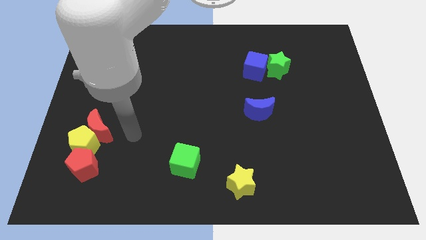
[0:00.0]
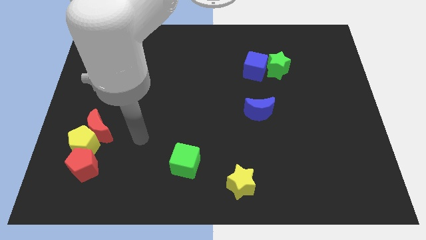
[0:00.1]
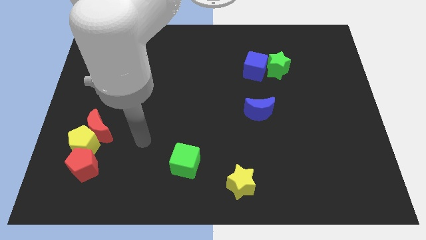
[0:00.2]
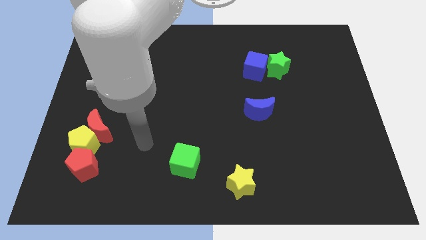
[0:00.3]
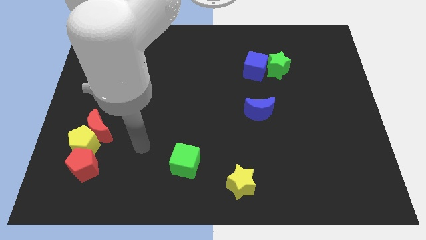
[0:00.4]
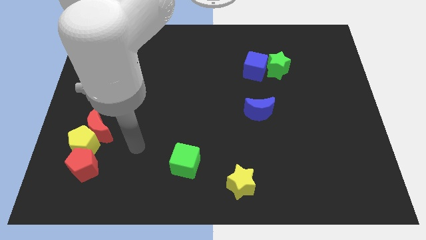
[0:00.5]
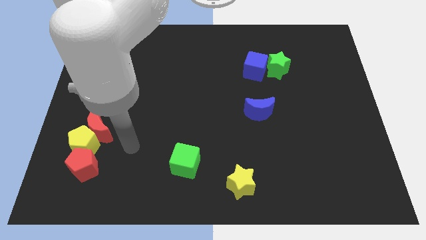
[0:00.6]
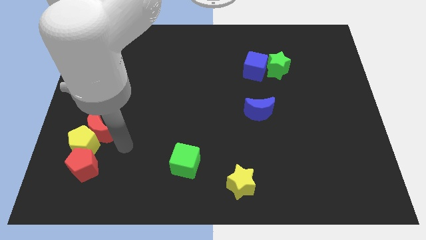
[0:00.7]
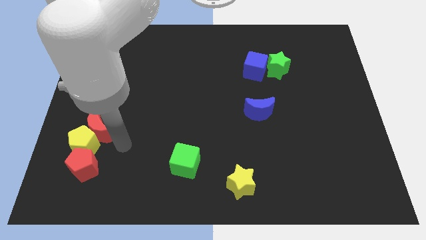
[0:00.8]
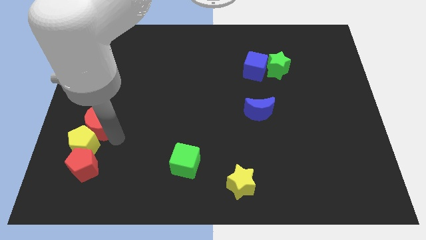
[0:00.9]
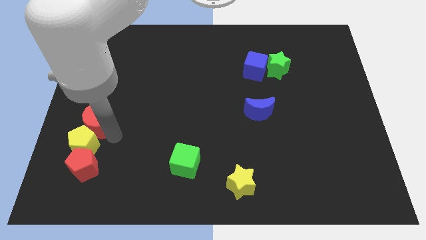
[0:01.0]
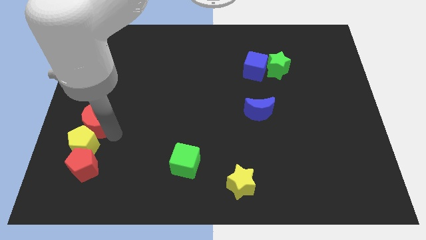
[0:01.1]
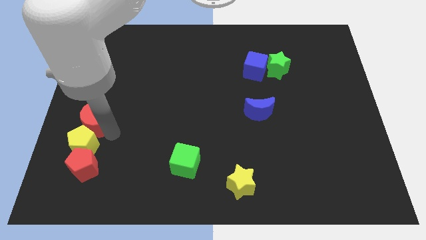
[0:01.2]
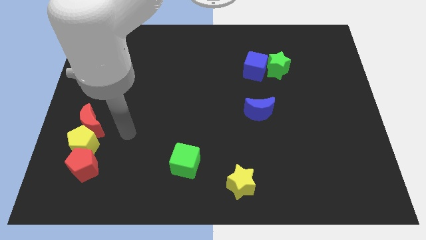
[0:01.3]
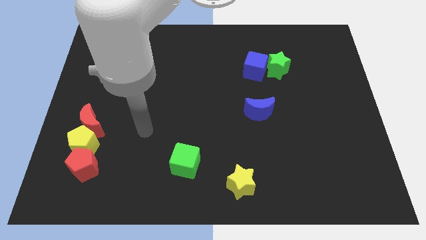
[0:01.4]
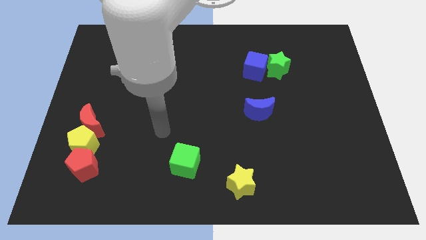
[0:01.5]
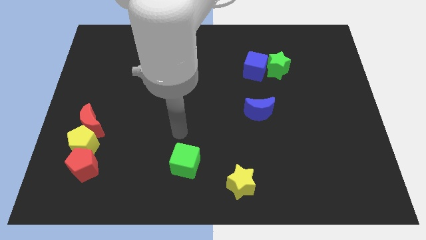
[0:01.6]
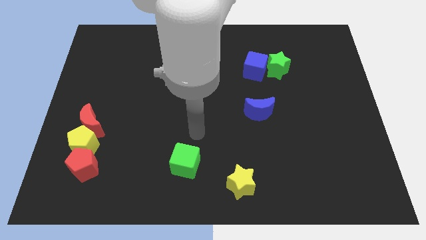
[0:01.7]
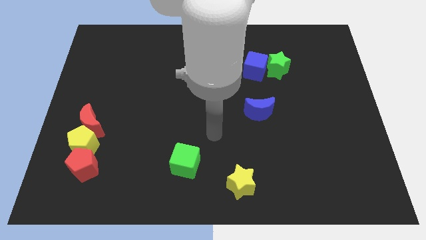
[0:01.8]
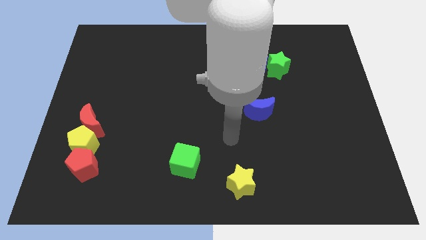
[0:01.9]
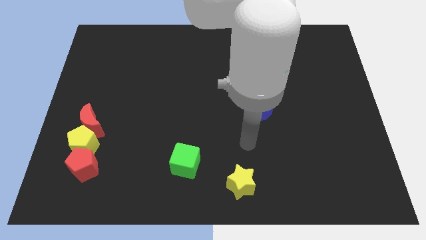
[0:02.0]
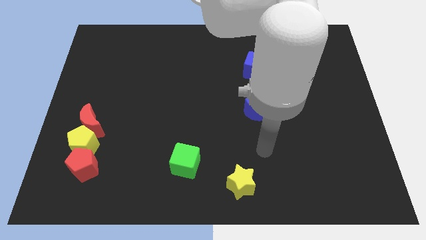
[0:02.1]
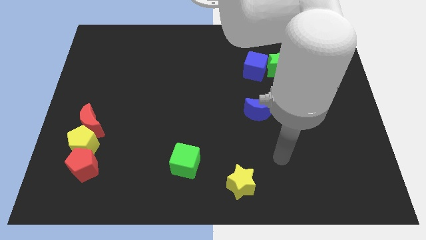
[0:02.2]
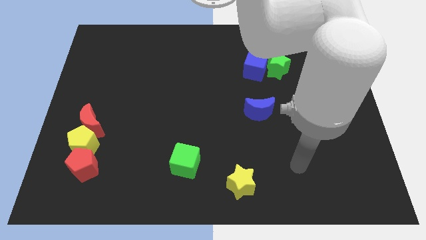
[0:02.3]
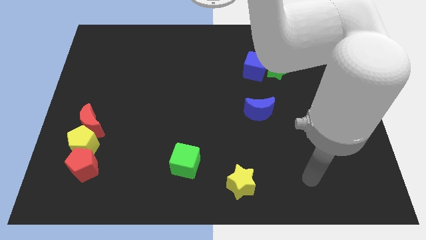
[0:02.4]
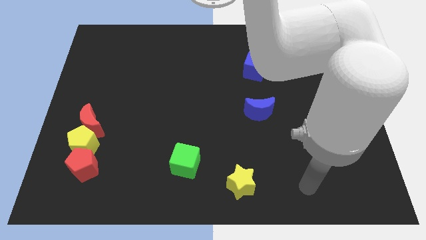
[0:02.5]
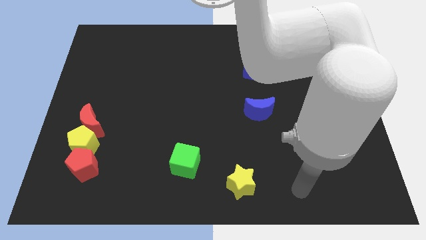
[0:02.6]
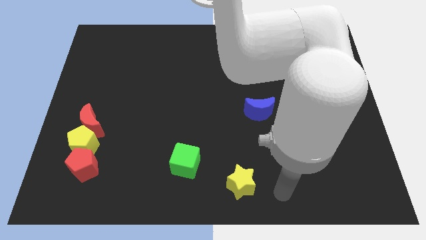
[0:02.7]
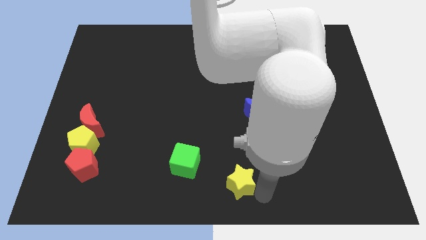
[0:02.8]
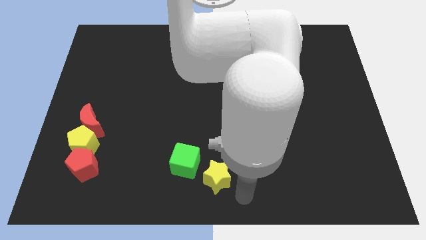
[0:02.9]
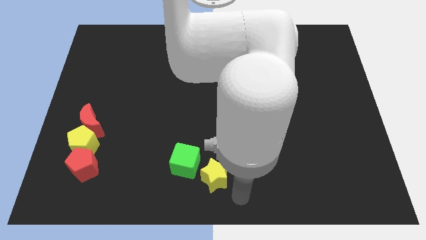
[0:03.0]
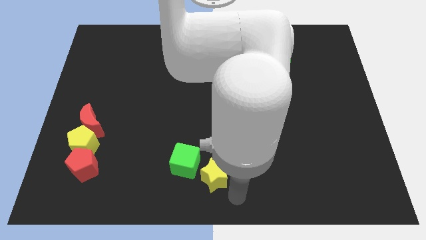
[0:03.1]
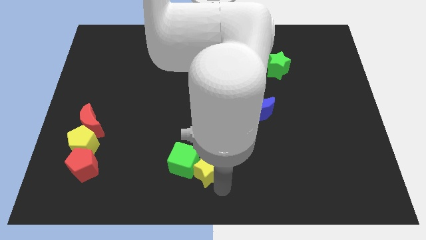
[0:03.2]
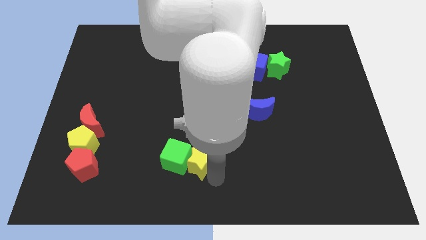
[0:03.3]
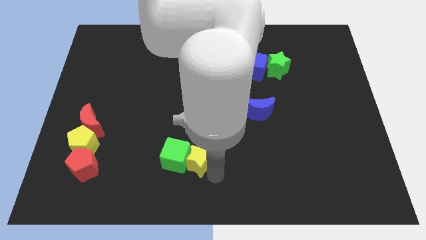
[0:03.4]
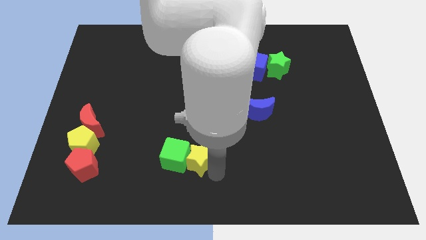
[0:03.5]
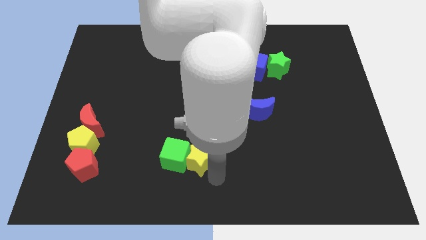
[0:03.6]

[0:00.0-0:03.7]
push yellow star close to green cube

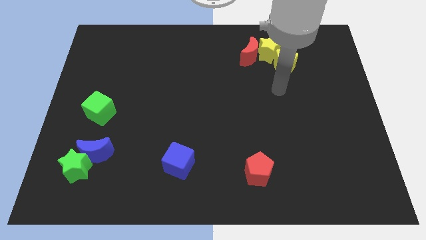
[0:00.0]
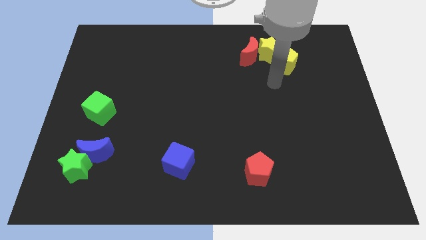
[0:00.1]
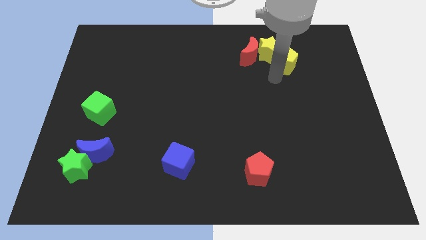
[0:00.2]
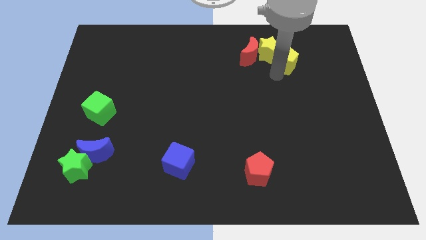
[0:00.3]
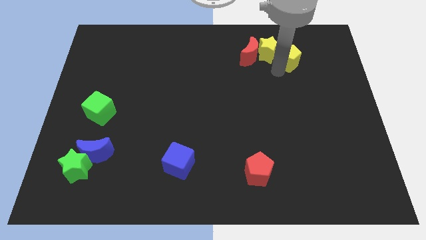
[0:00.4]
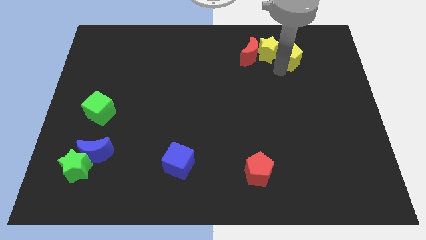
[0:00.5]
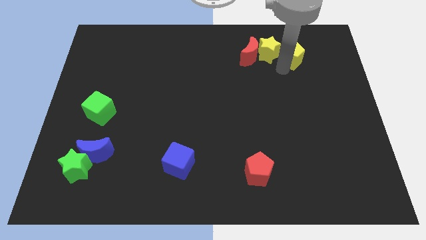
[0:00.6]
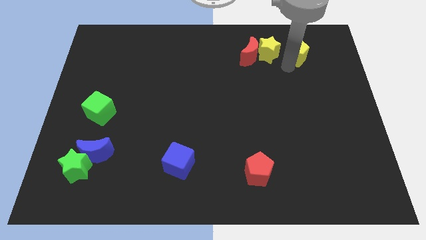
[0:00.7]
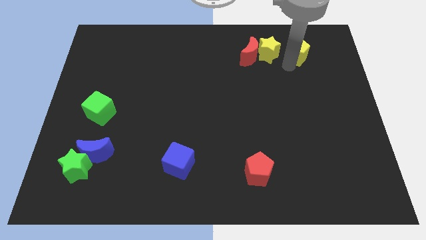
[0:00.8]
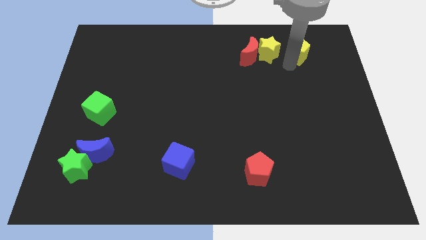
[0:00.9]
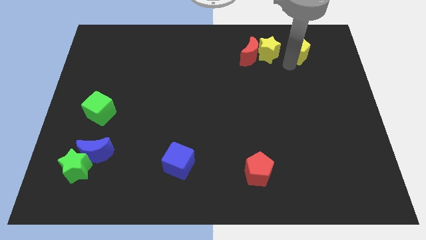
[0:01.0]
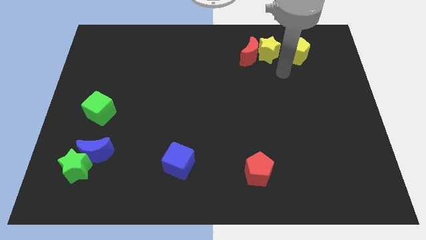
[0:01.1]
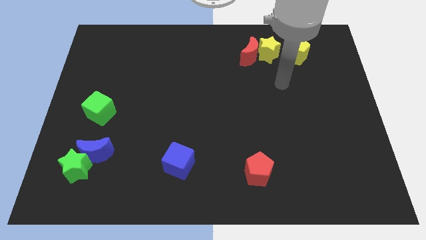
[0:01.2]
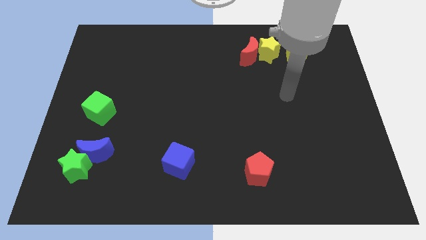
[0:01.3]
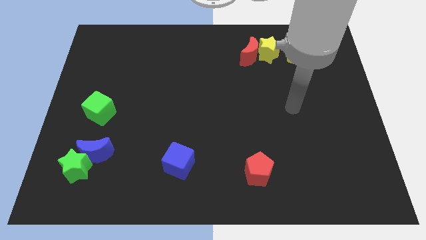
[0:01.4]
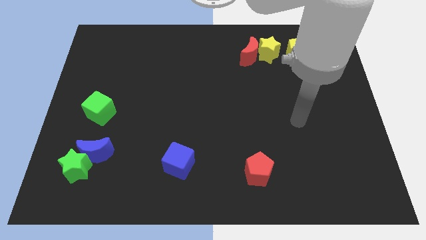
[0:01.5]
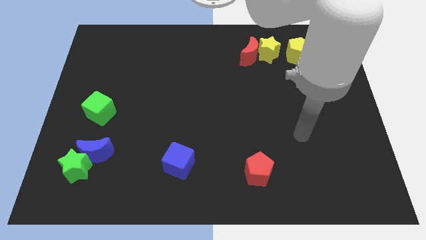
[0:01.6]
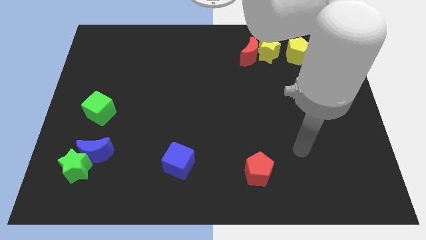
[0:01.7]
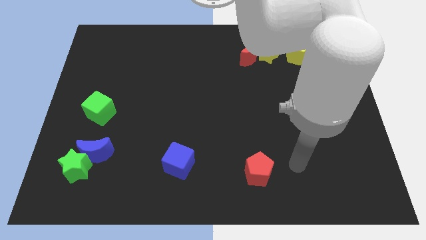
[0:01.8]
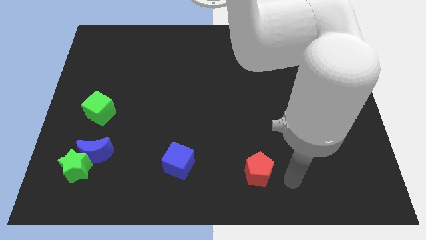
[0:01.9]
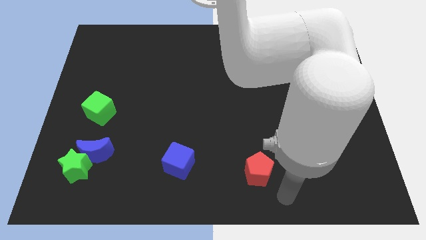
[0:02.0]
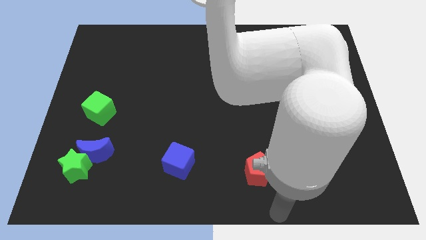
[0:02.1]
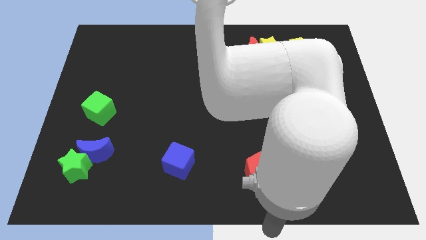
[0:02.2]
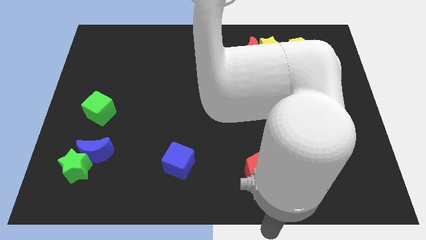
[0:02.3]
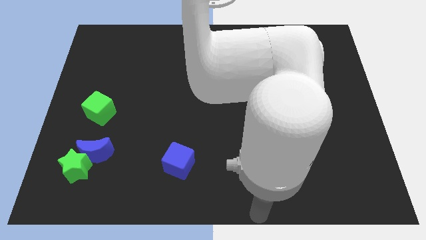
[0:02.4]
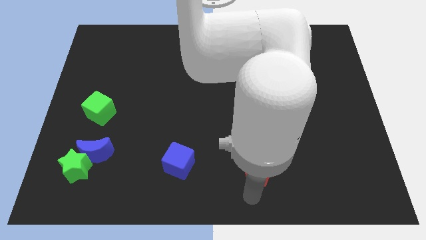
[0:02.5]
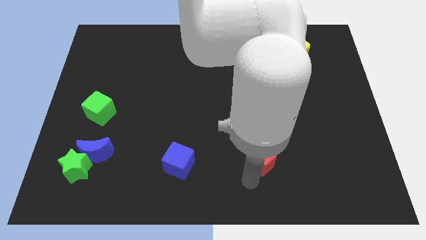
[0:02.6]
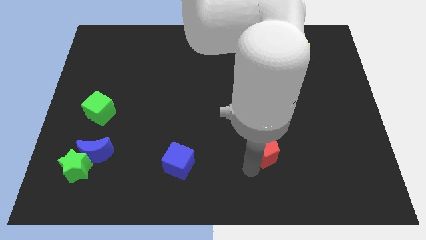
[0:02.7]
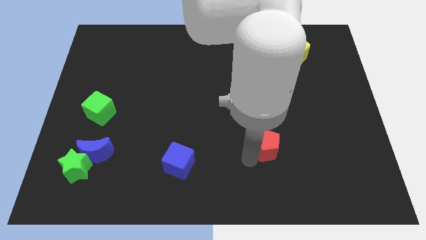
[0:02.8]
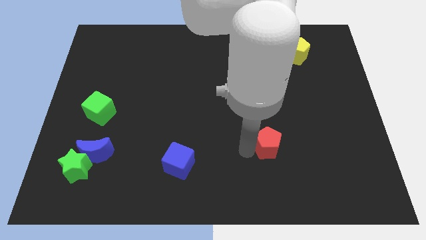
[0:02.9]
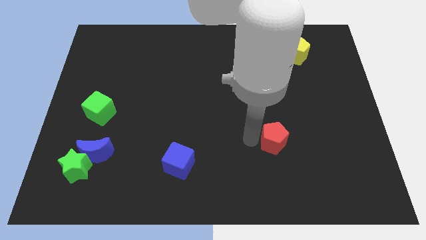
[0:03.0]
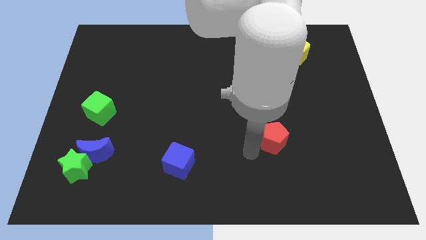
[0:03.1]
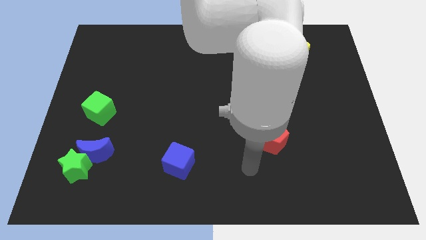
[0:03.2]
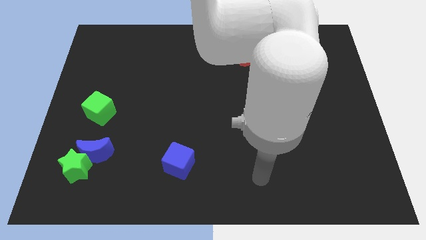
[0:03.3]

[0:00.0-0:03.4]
move the yellow pentagon and red pentagon towards top

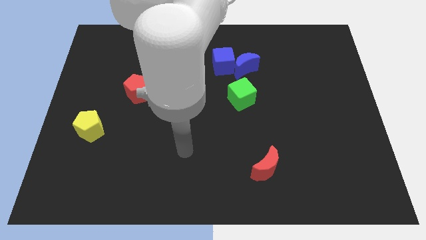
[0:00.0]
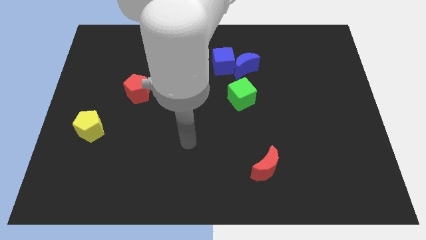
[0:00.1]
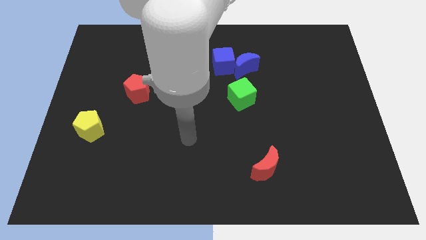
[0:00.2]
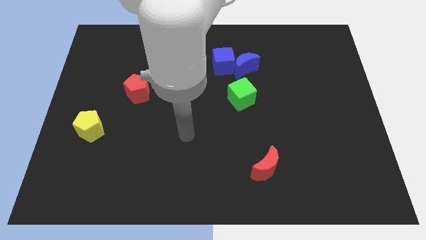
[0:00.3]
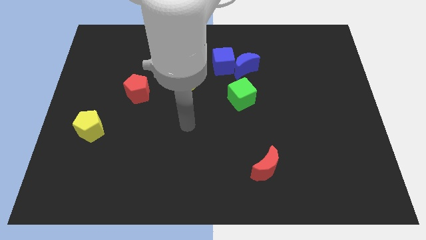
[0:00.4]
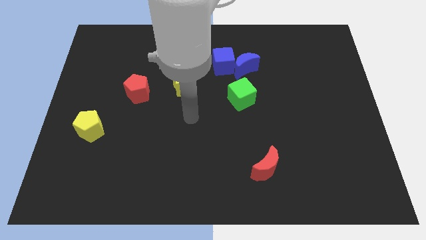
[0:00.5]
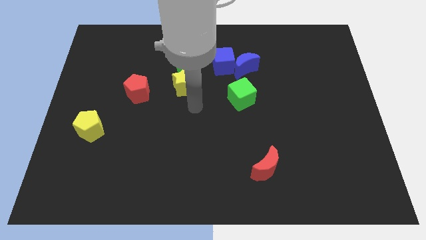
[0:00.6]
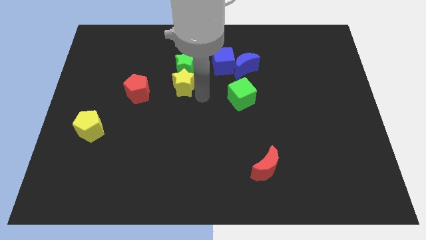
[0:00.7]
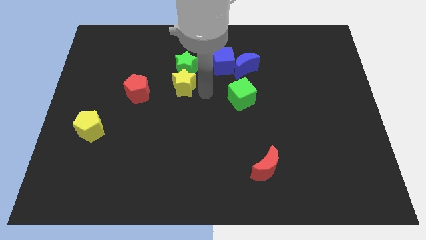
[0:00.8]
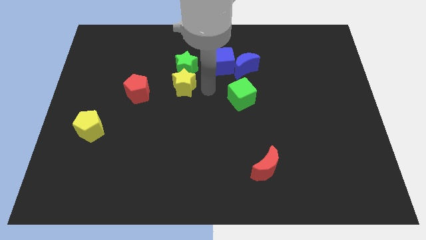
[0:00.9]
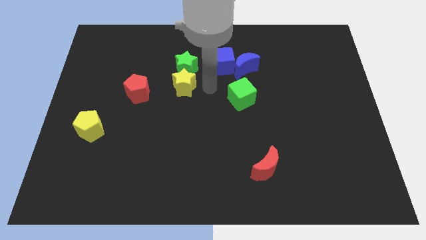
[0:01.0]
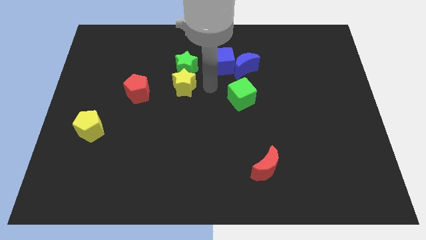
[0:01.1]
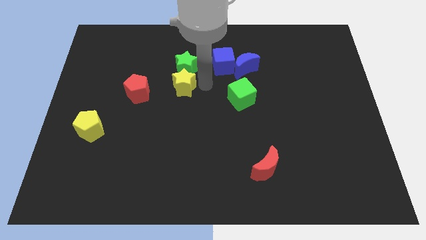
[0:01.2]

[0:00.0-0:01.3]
place your arm to the right side of yellow star

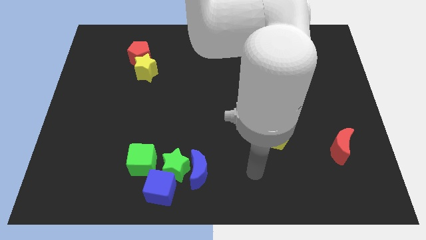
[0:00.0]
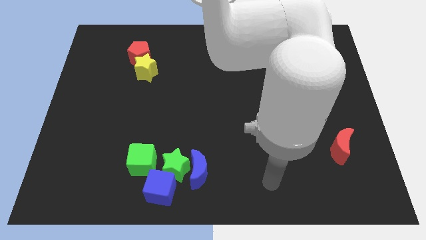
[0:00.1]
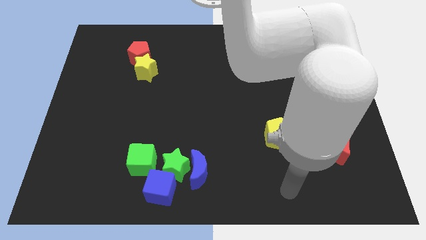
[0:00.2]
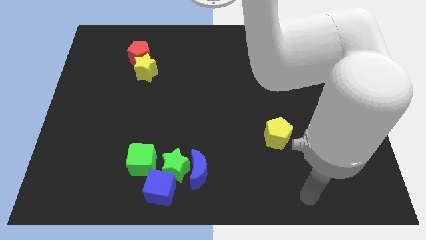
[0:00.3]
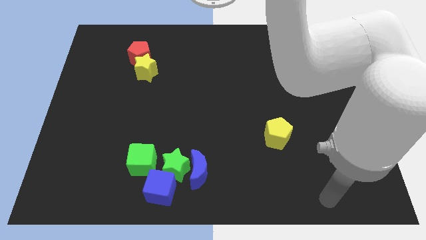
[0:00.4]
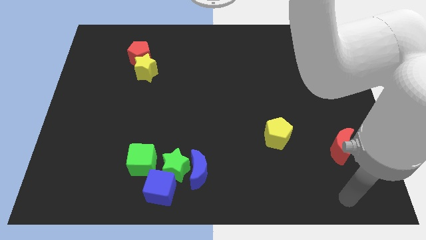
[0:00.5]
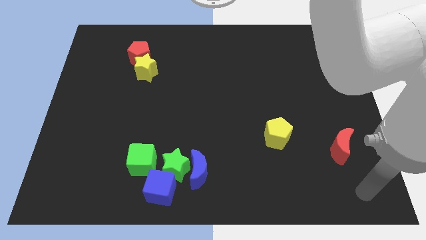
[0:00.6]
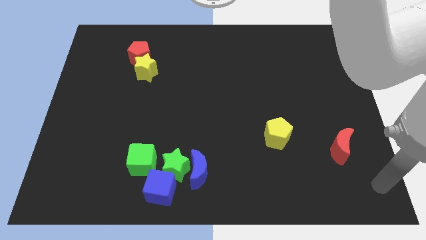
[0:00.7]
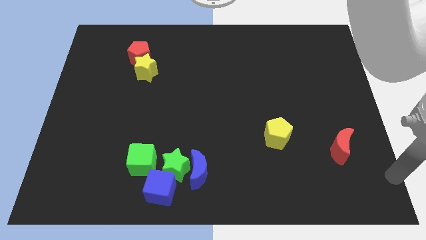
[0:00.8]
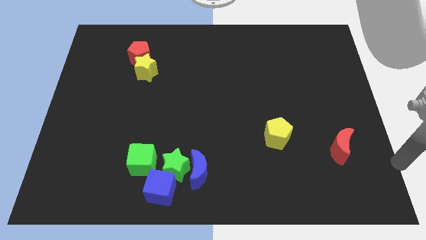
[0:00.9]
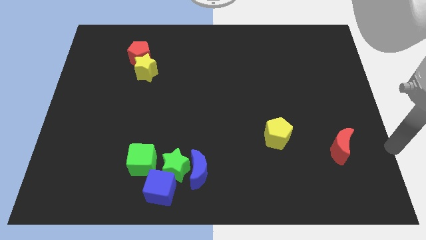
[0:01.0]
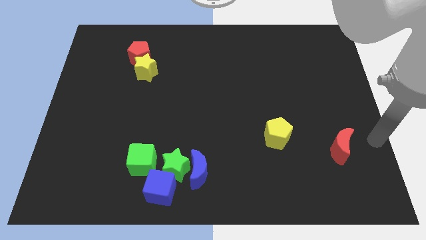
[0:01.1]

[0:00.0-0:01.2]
move the arm towards the right side of the red crescent
